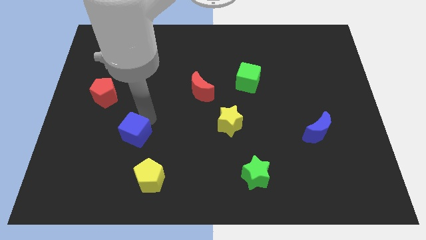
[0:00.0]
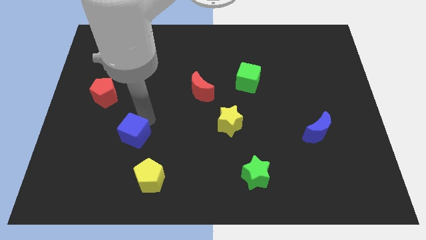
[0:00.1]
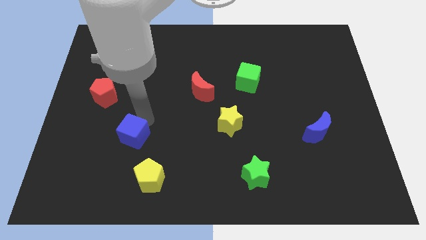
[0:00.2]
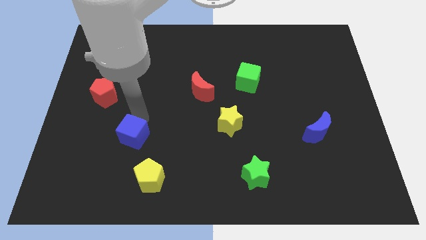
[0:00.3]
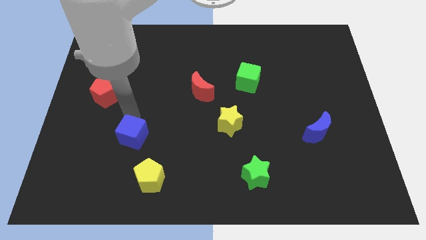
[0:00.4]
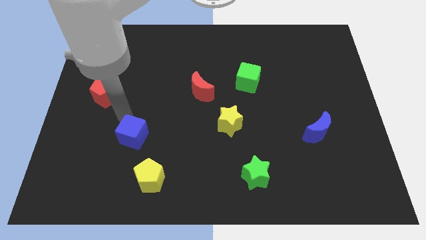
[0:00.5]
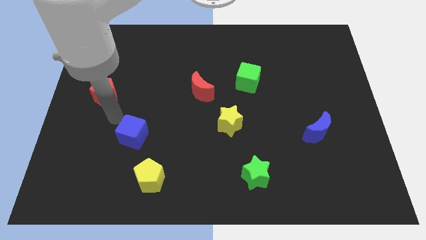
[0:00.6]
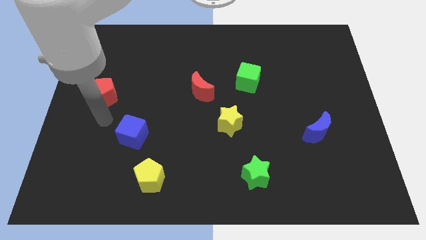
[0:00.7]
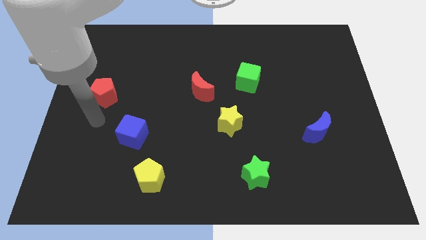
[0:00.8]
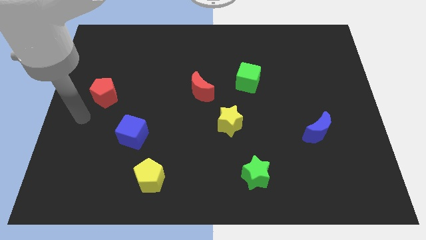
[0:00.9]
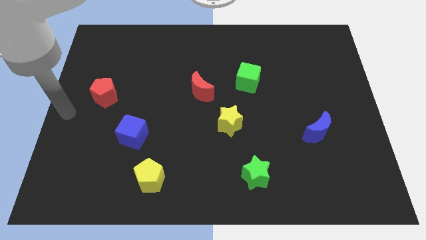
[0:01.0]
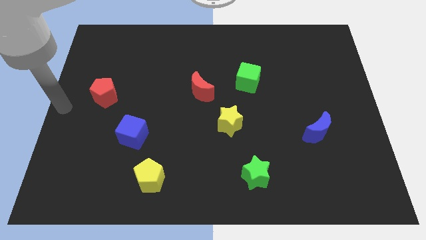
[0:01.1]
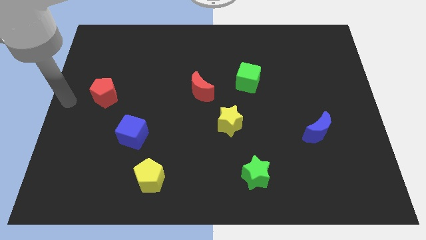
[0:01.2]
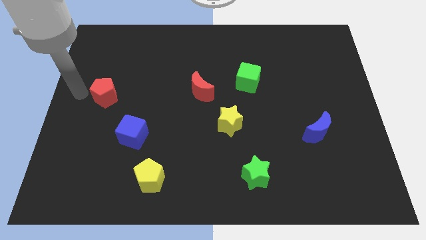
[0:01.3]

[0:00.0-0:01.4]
move your arm left to the red pentagon

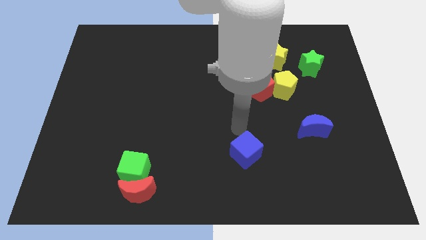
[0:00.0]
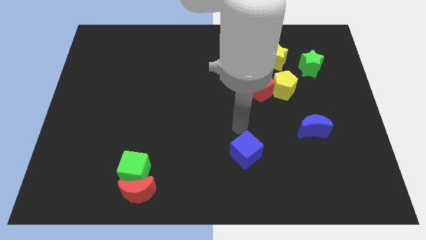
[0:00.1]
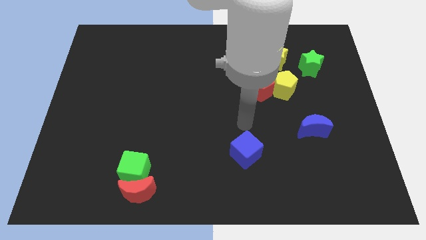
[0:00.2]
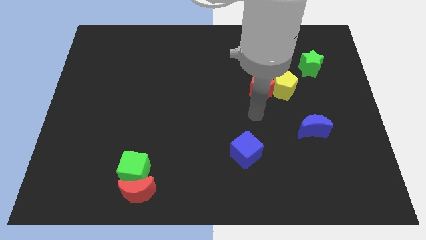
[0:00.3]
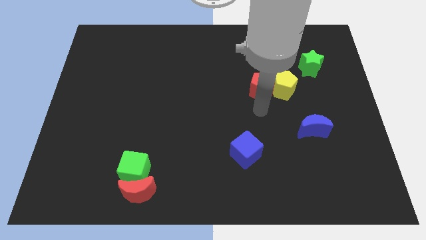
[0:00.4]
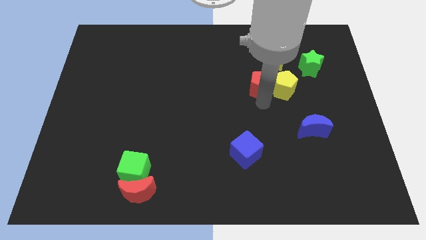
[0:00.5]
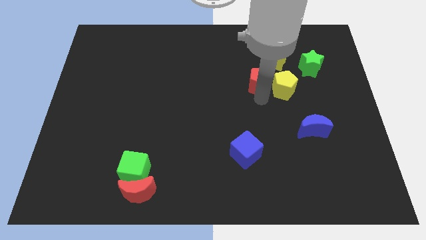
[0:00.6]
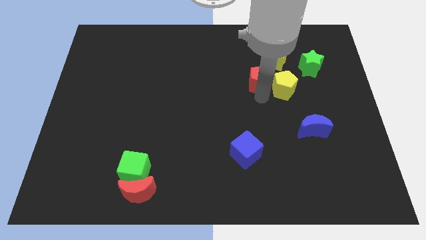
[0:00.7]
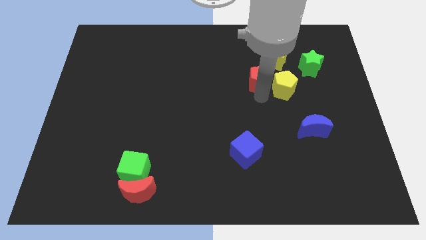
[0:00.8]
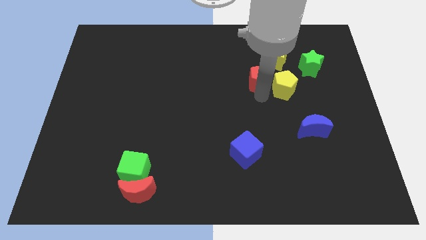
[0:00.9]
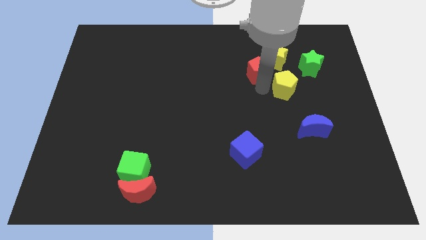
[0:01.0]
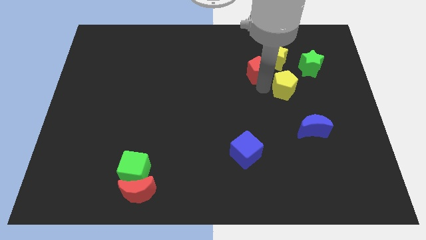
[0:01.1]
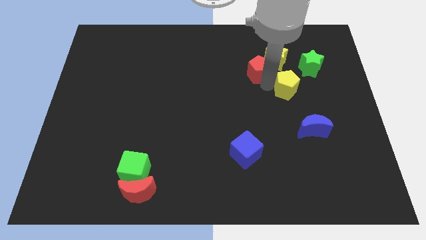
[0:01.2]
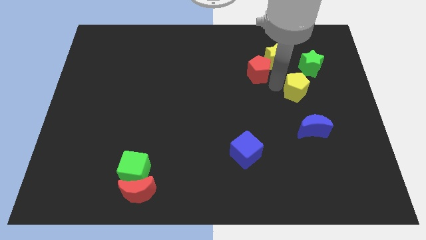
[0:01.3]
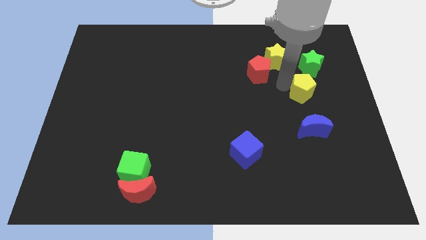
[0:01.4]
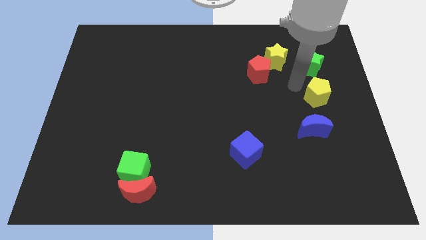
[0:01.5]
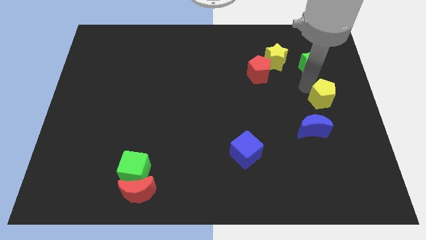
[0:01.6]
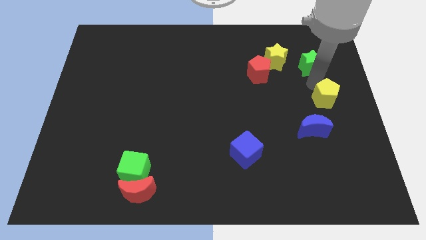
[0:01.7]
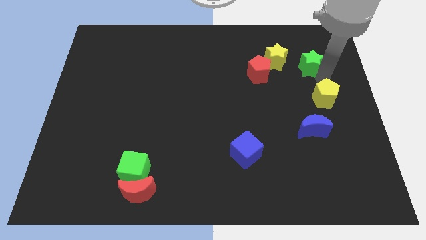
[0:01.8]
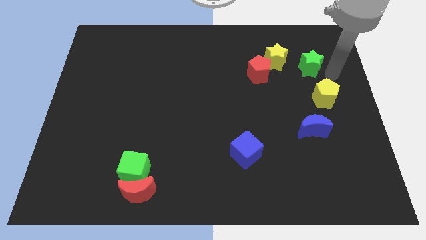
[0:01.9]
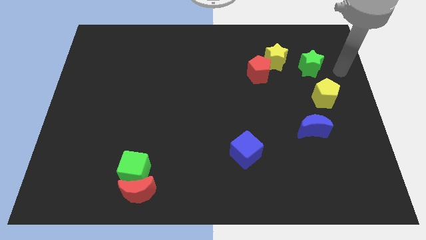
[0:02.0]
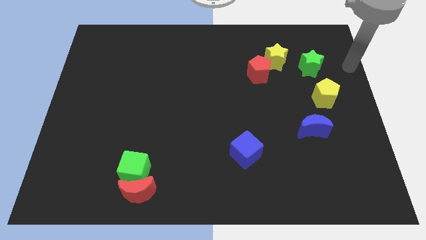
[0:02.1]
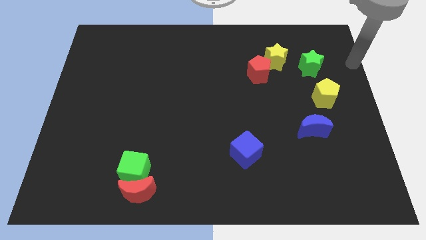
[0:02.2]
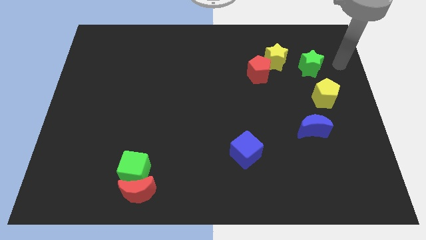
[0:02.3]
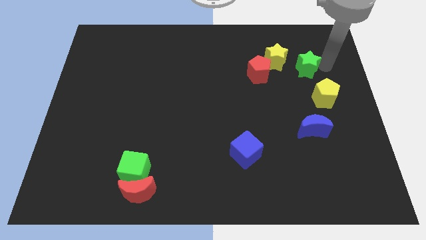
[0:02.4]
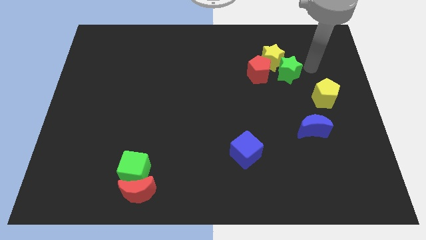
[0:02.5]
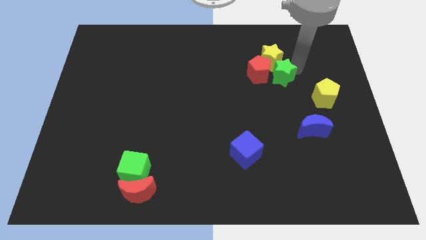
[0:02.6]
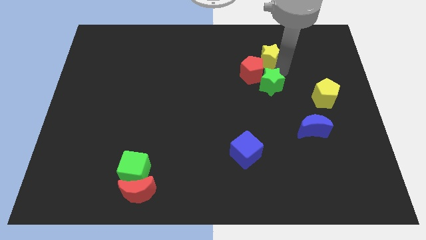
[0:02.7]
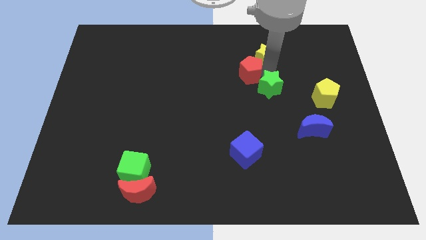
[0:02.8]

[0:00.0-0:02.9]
push green star below yellow star

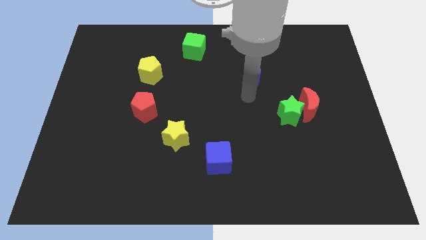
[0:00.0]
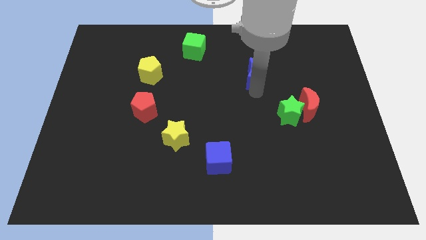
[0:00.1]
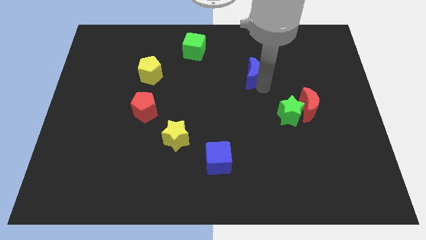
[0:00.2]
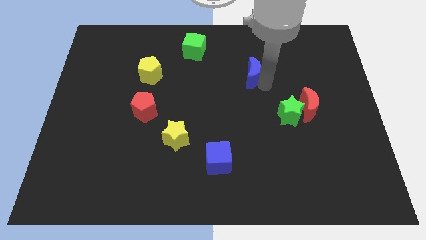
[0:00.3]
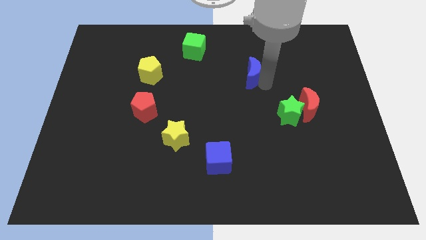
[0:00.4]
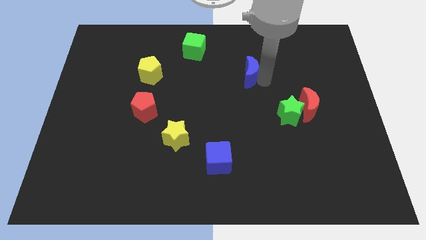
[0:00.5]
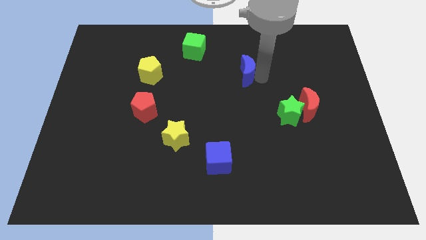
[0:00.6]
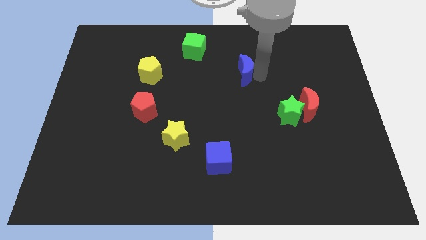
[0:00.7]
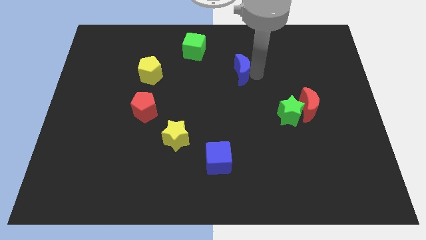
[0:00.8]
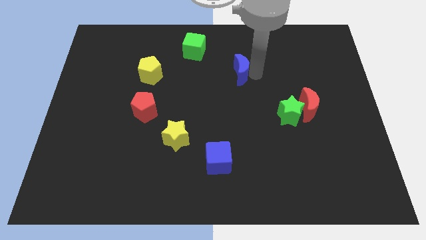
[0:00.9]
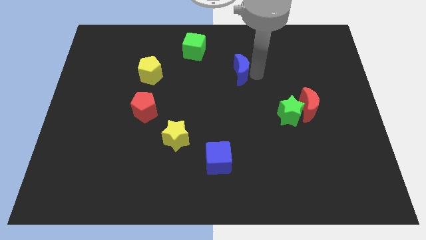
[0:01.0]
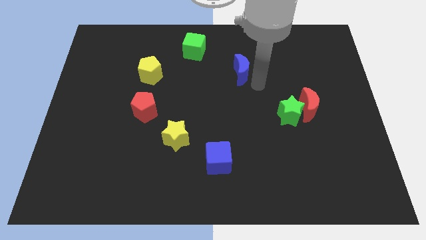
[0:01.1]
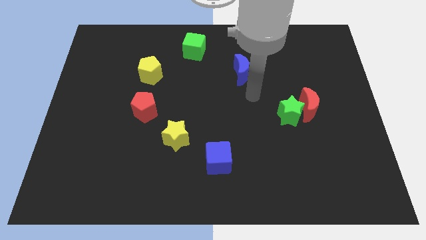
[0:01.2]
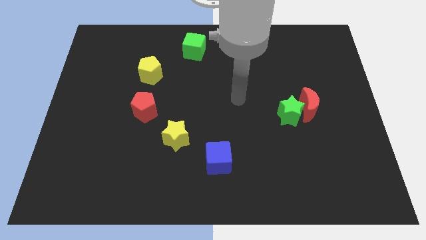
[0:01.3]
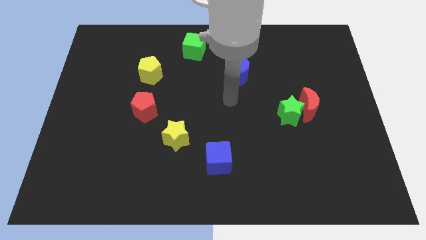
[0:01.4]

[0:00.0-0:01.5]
push the blue moon between green cube and green star

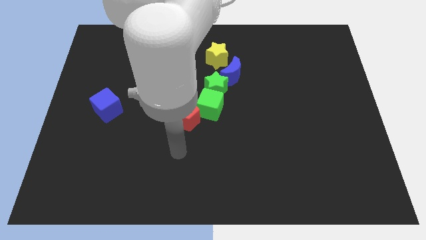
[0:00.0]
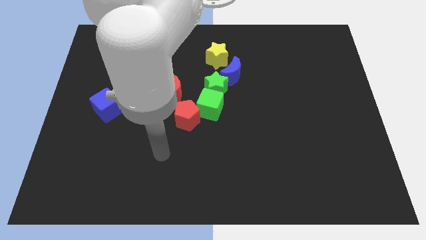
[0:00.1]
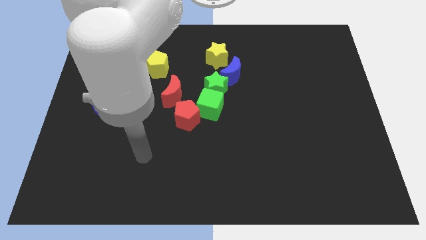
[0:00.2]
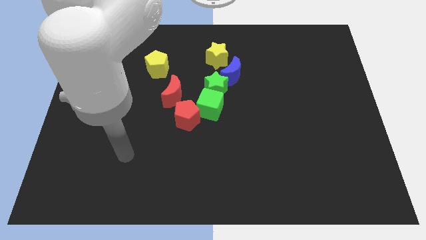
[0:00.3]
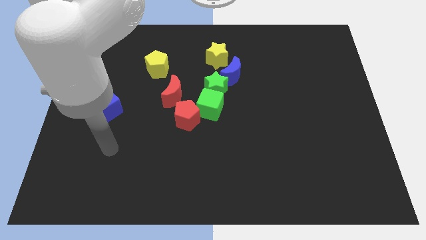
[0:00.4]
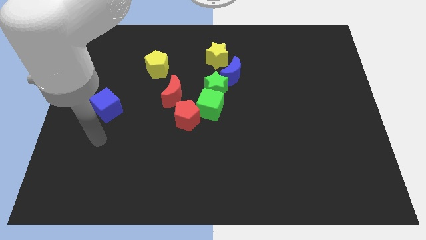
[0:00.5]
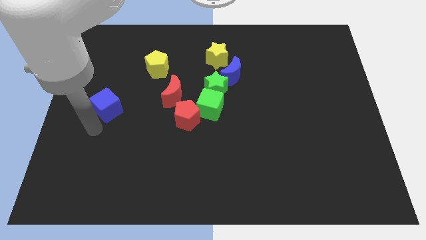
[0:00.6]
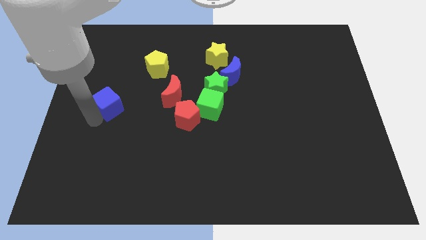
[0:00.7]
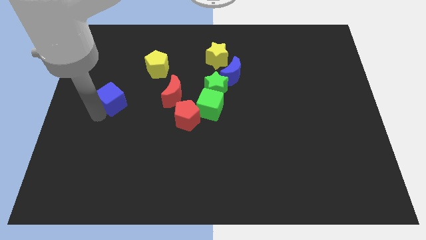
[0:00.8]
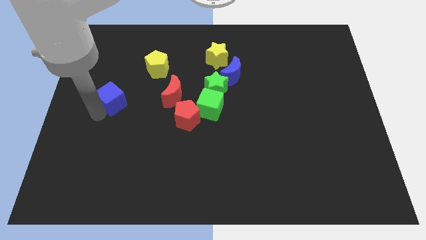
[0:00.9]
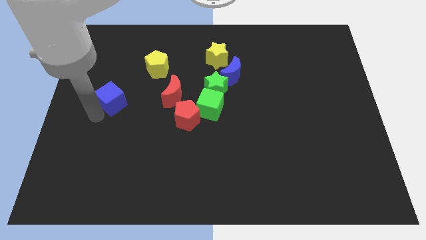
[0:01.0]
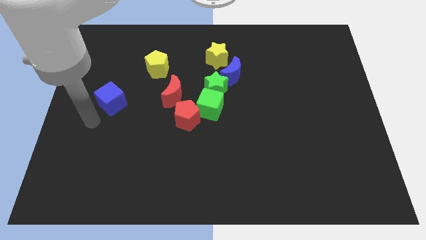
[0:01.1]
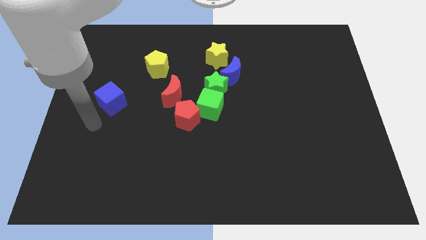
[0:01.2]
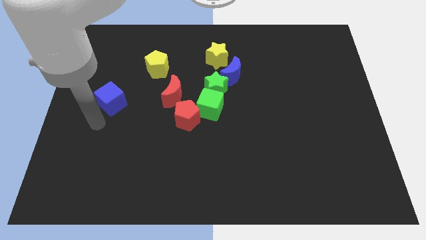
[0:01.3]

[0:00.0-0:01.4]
move the blue cube slightly to the top

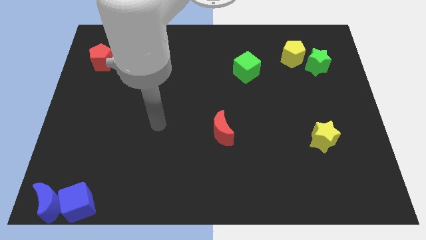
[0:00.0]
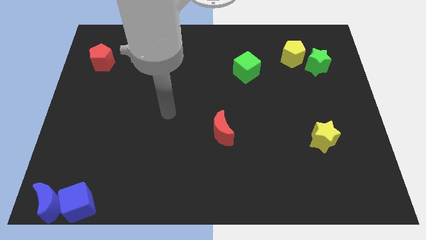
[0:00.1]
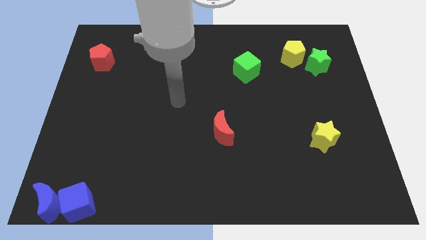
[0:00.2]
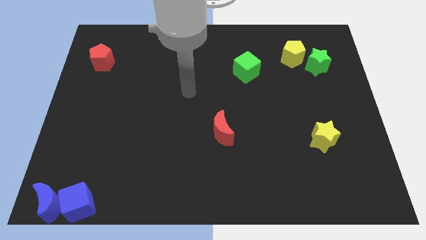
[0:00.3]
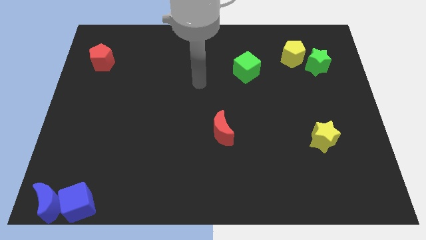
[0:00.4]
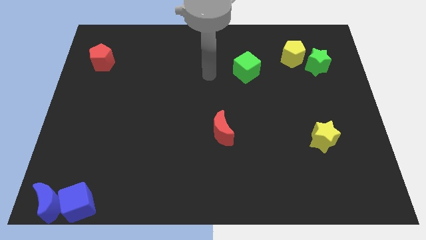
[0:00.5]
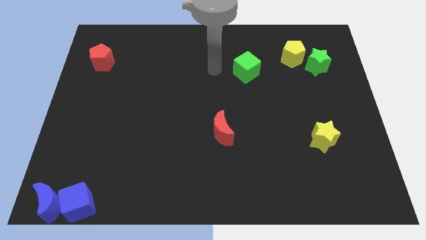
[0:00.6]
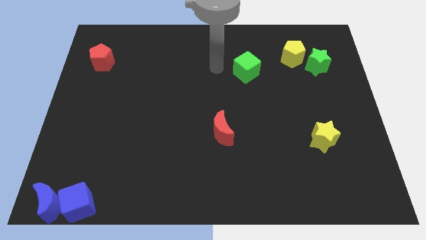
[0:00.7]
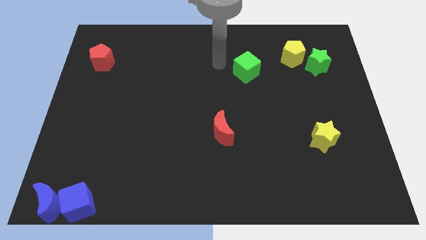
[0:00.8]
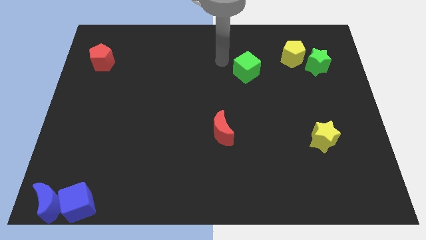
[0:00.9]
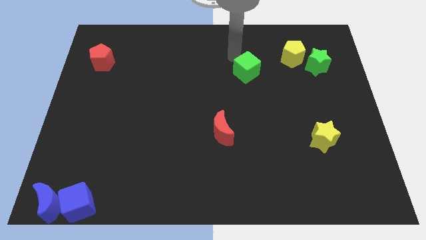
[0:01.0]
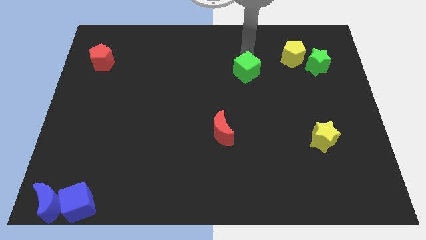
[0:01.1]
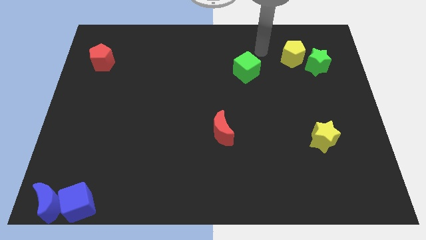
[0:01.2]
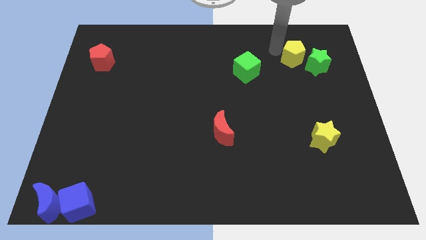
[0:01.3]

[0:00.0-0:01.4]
move your arm to the left of yellow pentagon
